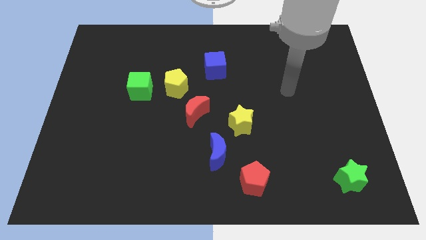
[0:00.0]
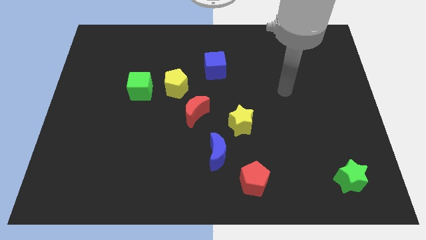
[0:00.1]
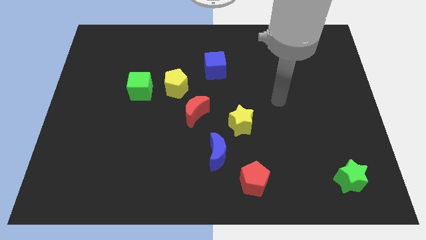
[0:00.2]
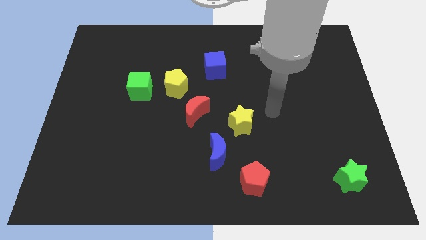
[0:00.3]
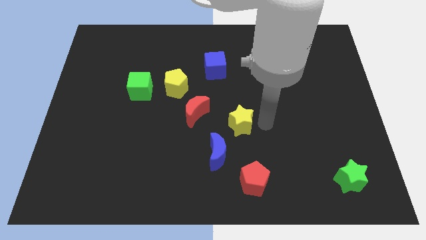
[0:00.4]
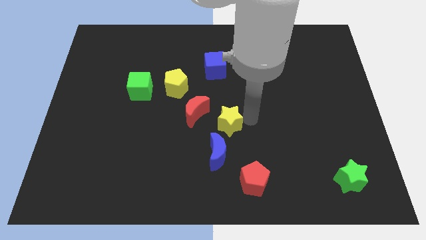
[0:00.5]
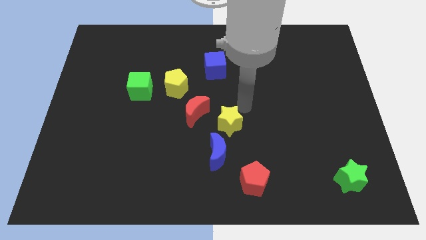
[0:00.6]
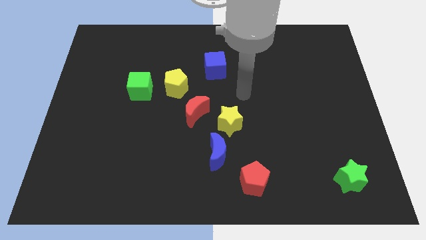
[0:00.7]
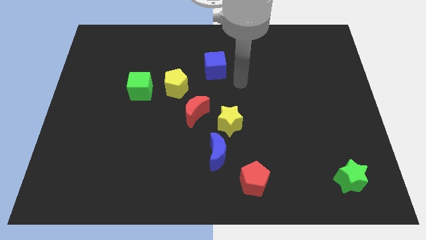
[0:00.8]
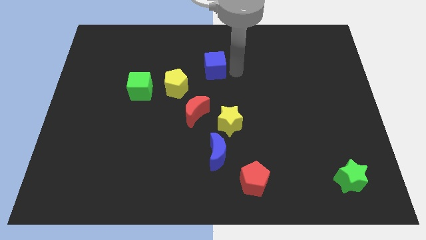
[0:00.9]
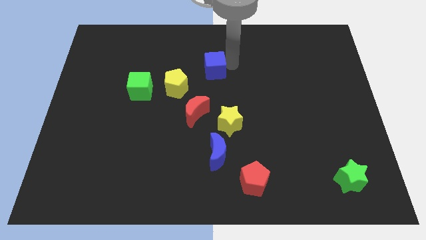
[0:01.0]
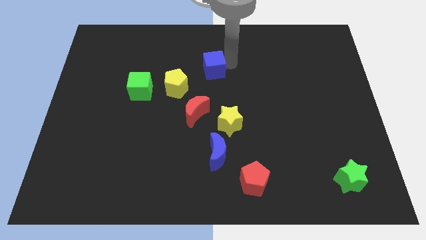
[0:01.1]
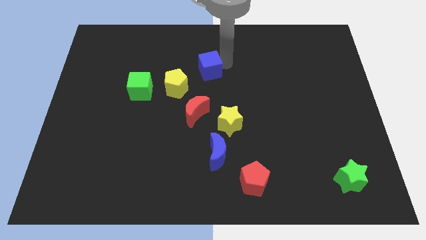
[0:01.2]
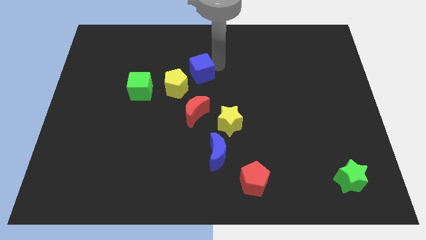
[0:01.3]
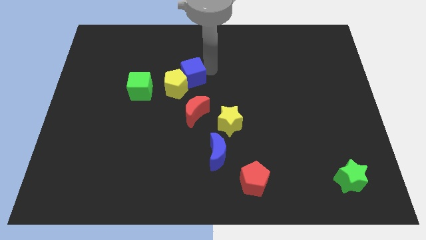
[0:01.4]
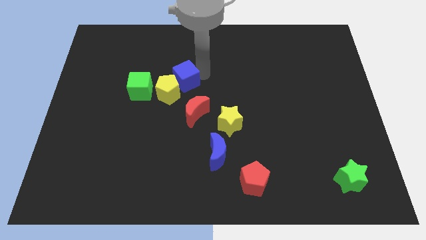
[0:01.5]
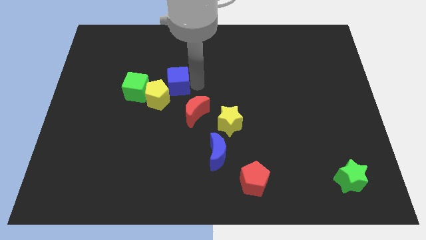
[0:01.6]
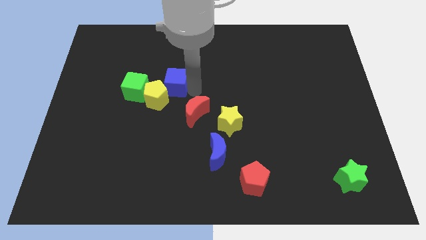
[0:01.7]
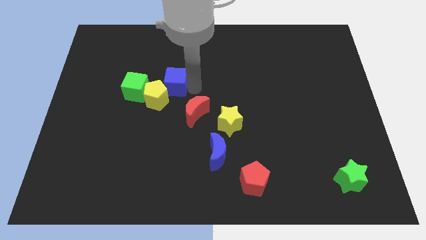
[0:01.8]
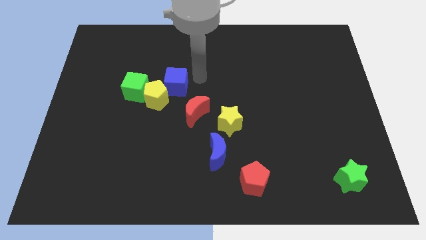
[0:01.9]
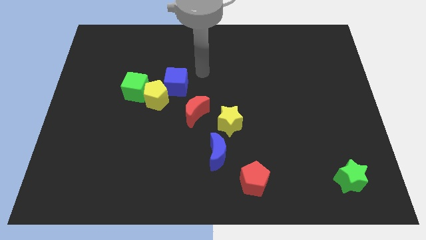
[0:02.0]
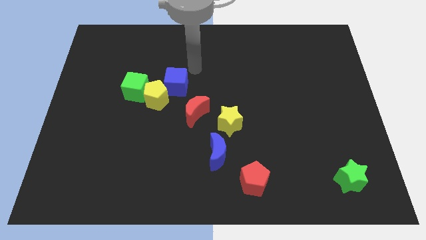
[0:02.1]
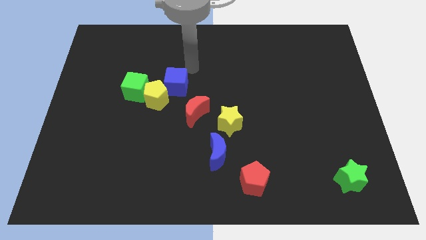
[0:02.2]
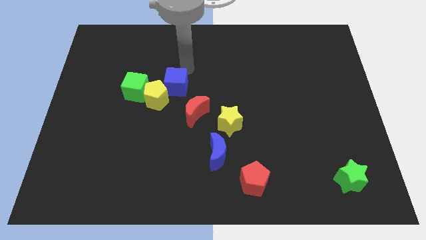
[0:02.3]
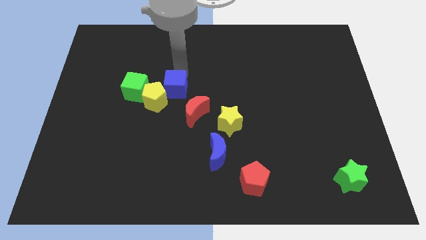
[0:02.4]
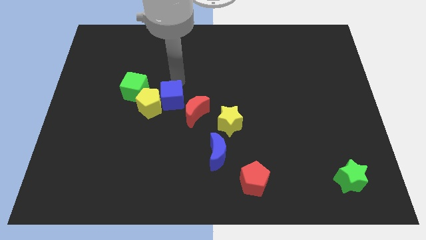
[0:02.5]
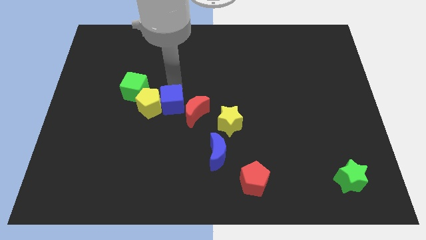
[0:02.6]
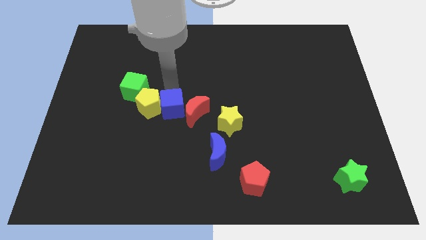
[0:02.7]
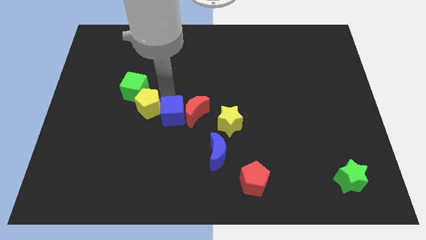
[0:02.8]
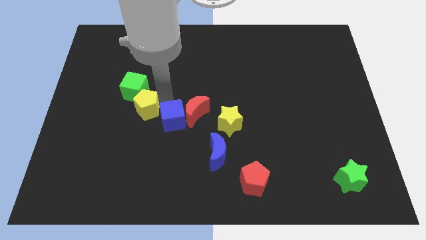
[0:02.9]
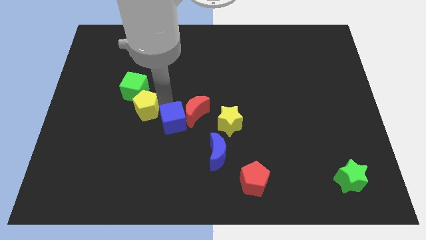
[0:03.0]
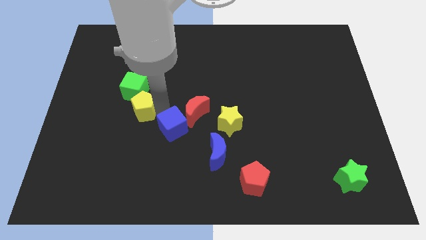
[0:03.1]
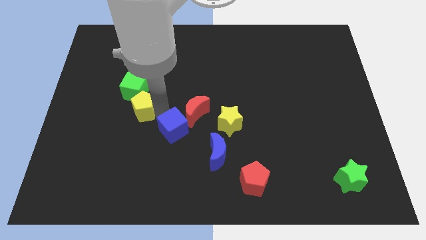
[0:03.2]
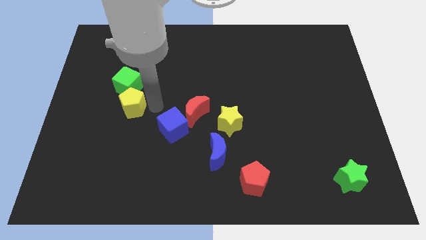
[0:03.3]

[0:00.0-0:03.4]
push the blue cube slightly downwards

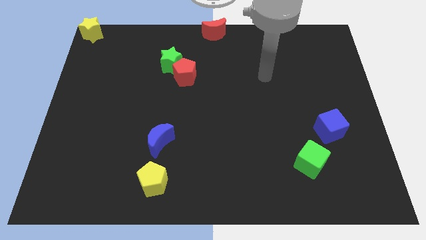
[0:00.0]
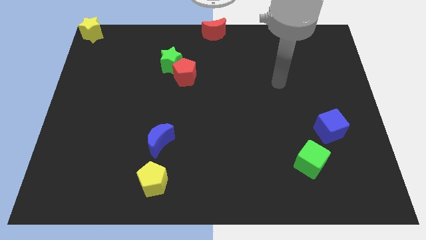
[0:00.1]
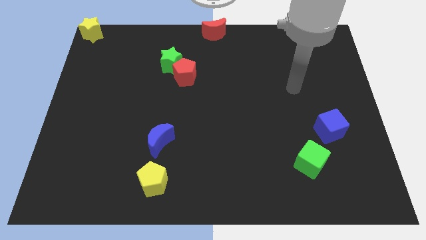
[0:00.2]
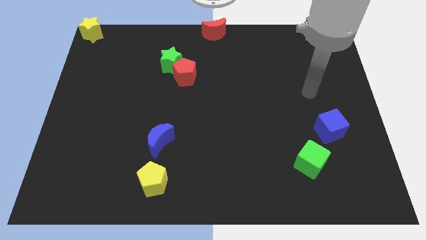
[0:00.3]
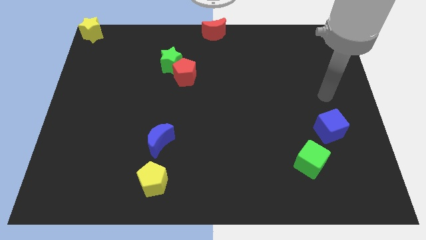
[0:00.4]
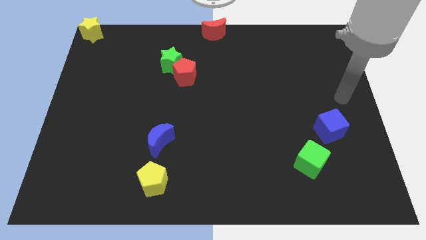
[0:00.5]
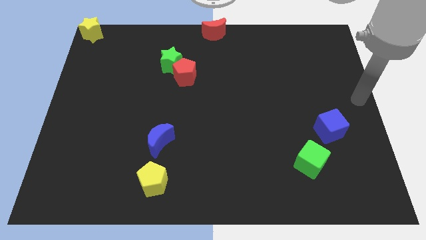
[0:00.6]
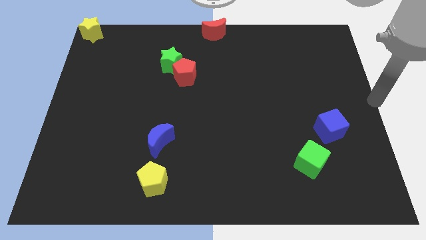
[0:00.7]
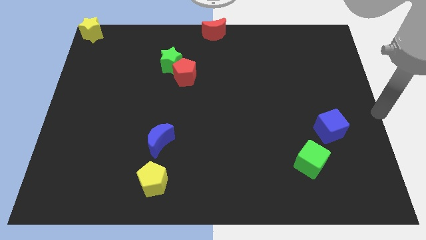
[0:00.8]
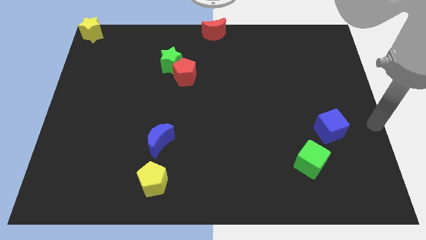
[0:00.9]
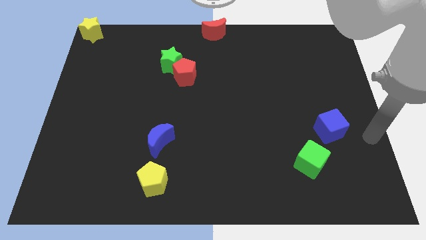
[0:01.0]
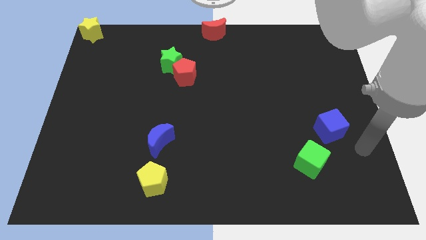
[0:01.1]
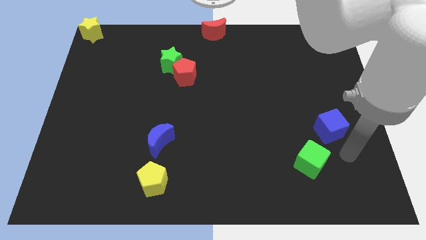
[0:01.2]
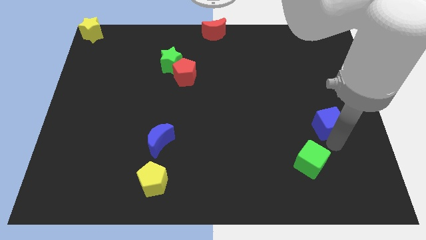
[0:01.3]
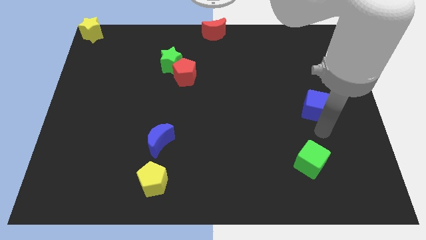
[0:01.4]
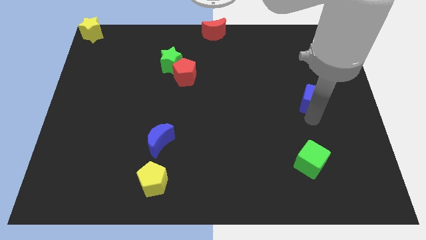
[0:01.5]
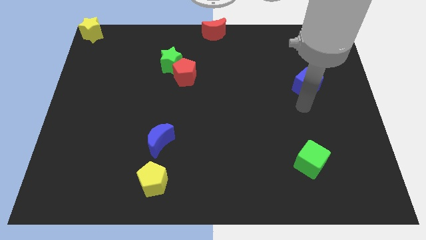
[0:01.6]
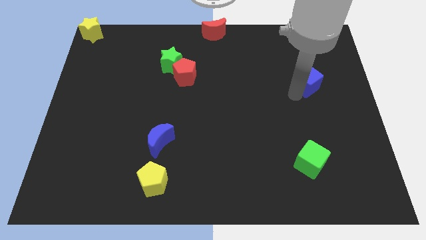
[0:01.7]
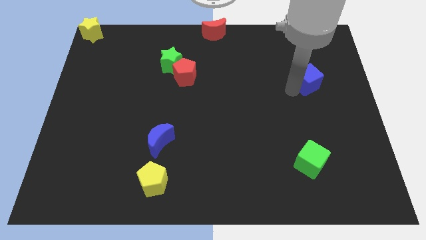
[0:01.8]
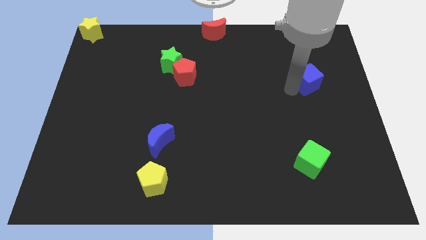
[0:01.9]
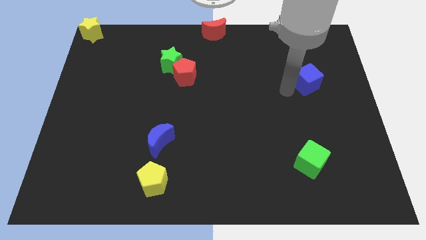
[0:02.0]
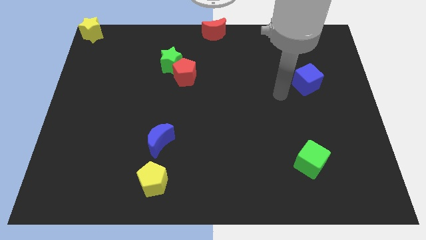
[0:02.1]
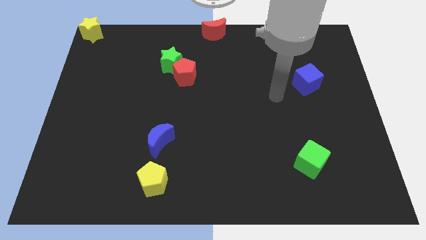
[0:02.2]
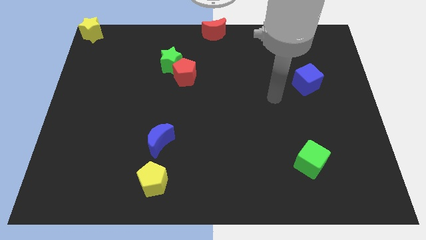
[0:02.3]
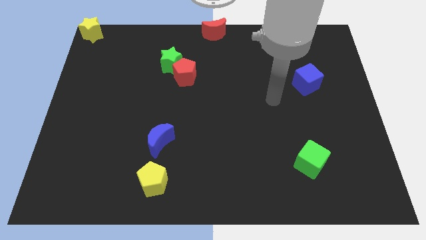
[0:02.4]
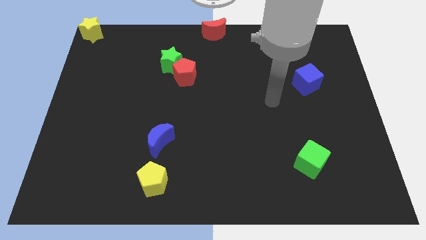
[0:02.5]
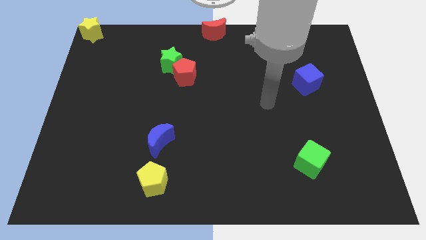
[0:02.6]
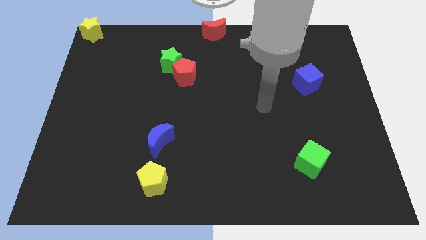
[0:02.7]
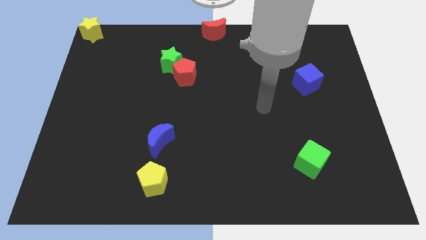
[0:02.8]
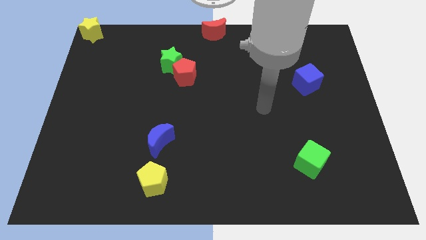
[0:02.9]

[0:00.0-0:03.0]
slightly move the blue cube above the green cube

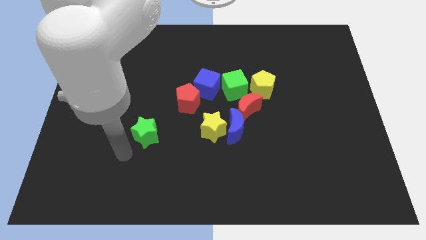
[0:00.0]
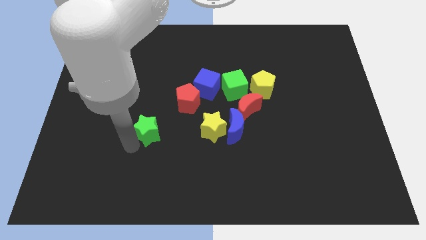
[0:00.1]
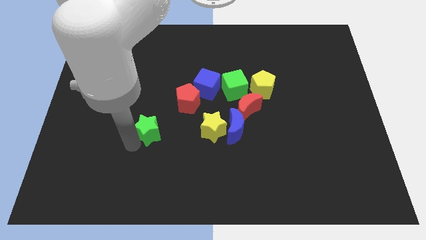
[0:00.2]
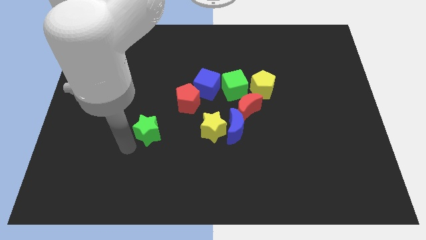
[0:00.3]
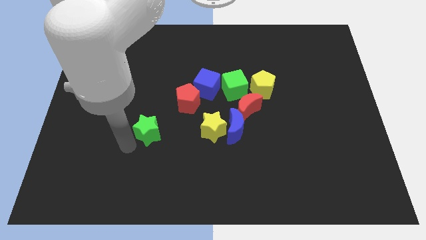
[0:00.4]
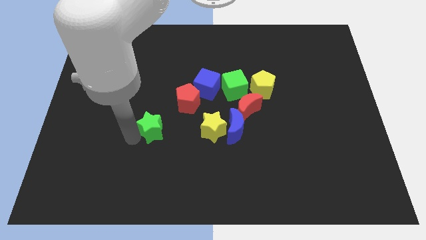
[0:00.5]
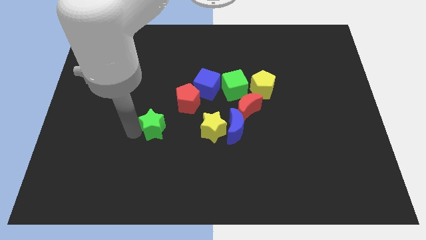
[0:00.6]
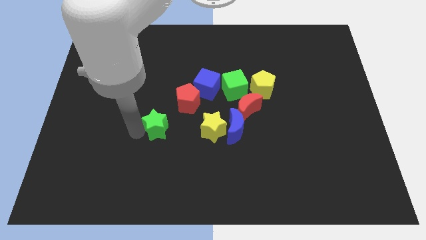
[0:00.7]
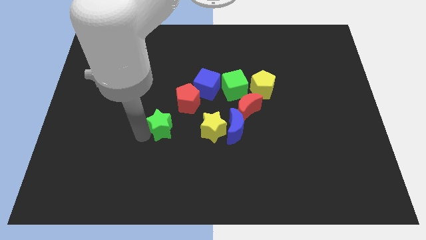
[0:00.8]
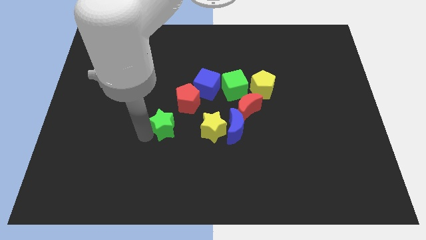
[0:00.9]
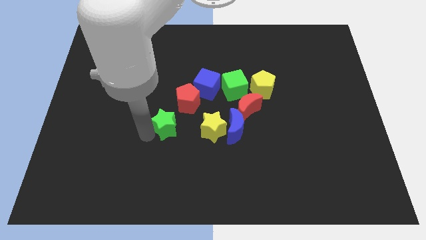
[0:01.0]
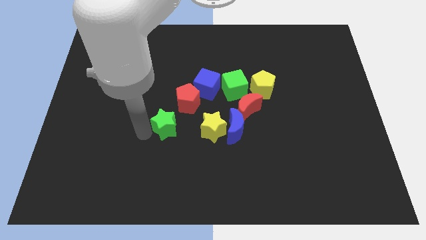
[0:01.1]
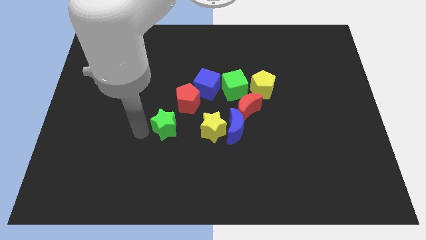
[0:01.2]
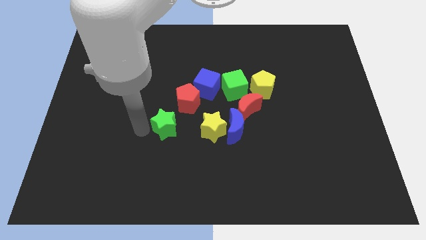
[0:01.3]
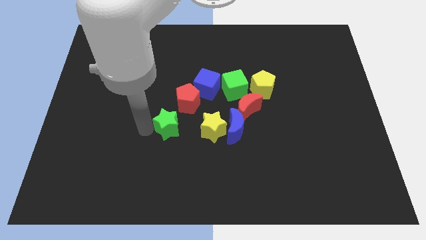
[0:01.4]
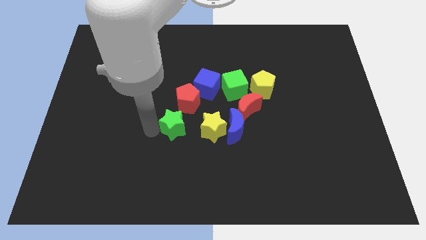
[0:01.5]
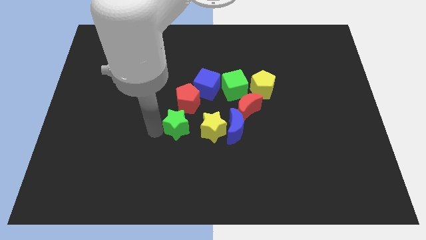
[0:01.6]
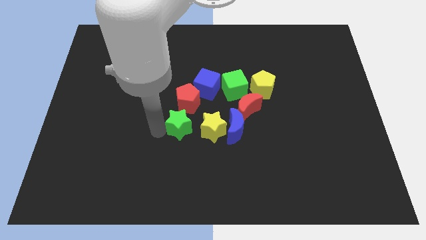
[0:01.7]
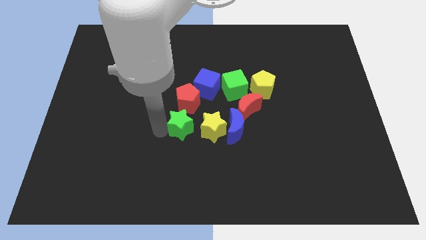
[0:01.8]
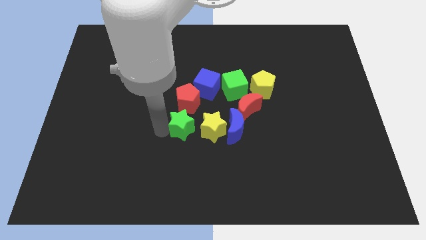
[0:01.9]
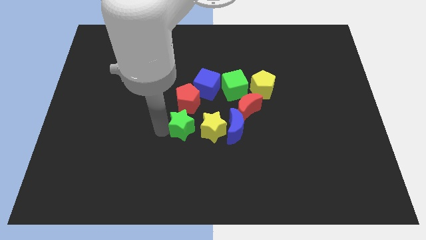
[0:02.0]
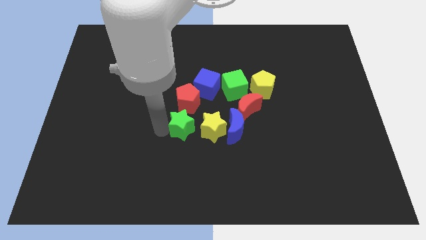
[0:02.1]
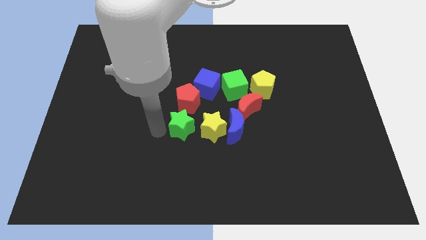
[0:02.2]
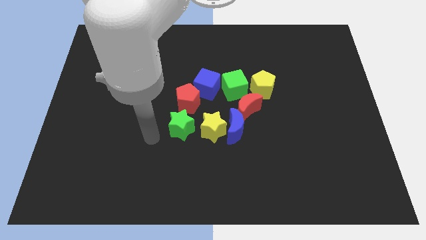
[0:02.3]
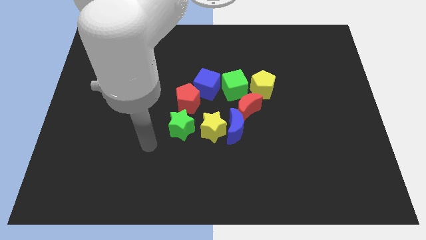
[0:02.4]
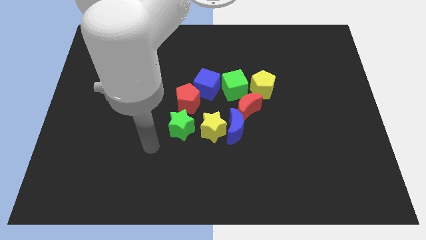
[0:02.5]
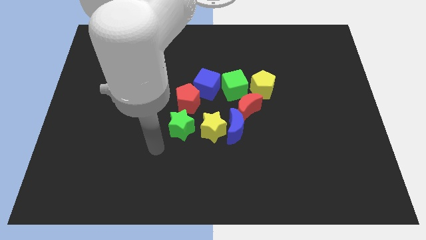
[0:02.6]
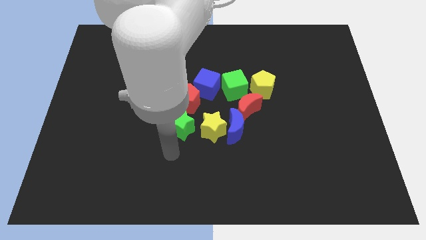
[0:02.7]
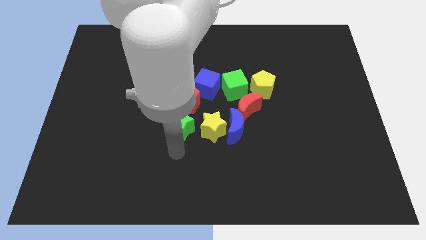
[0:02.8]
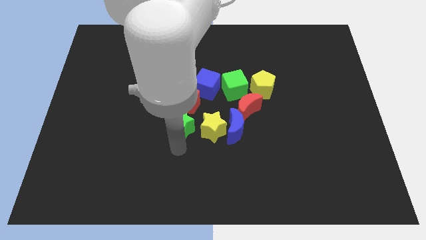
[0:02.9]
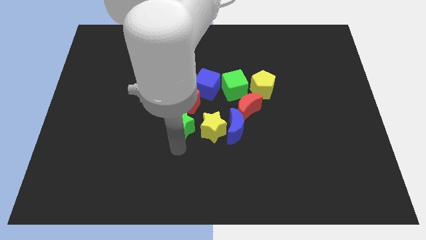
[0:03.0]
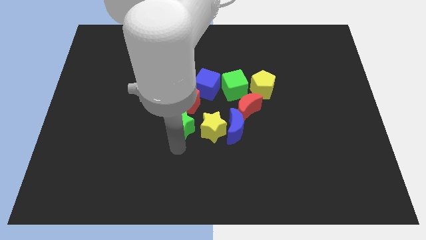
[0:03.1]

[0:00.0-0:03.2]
move the green star below the red pentagon
